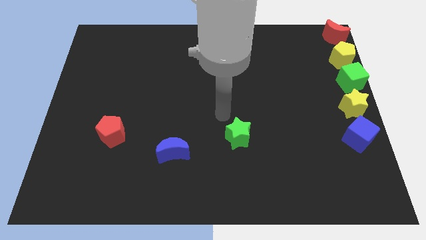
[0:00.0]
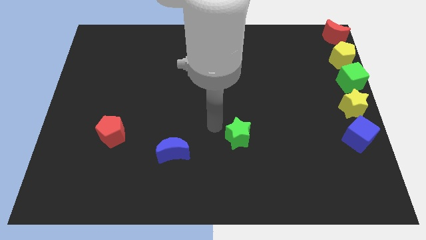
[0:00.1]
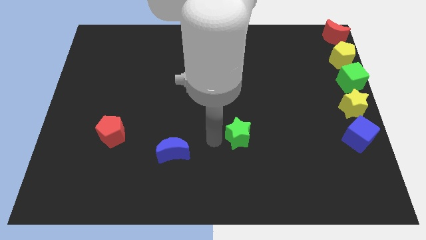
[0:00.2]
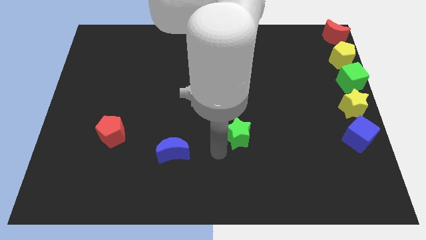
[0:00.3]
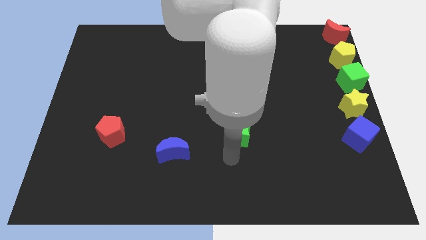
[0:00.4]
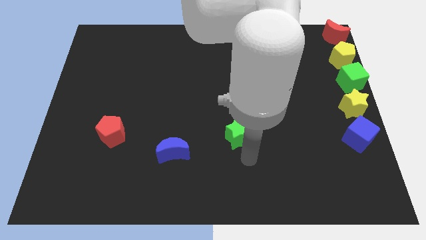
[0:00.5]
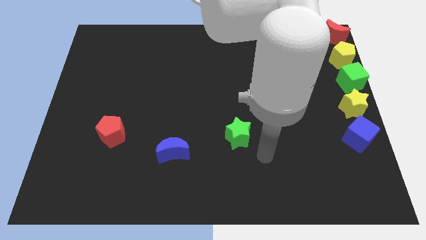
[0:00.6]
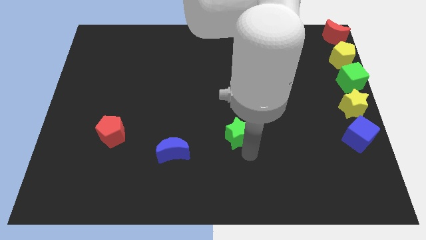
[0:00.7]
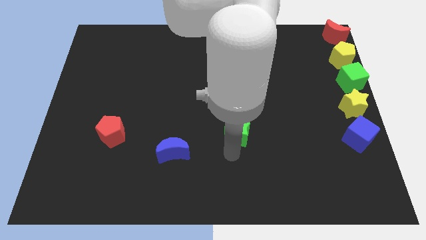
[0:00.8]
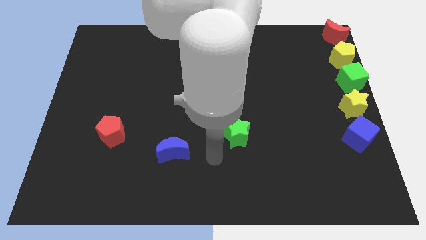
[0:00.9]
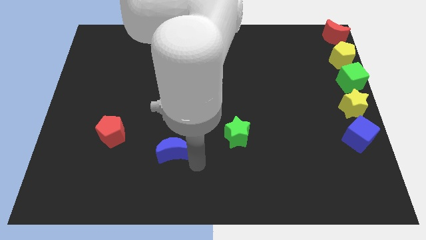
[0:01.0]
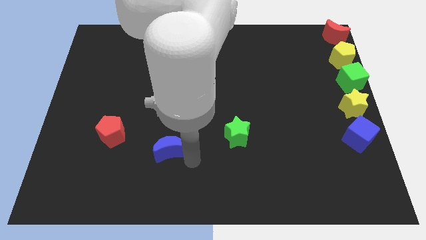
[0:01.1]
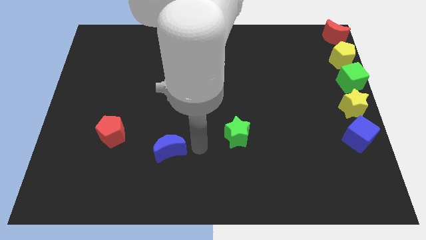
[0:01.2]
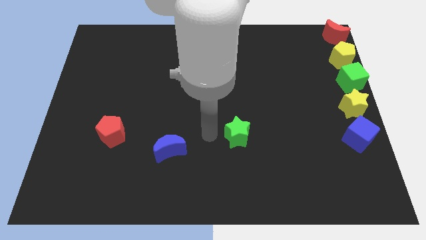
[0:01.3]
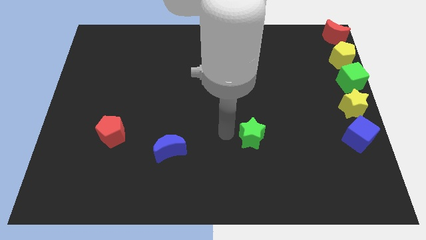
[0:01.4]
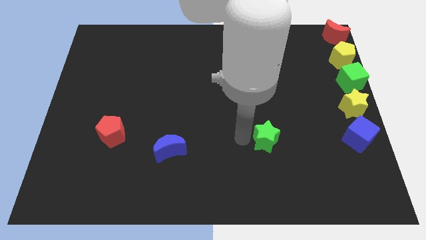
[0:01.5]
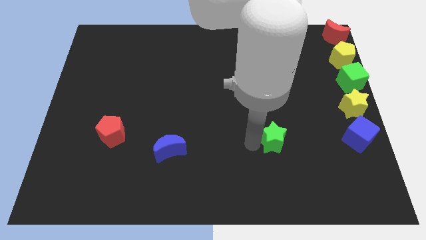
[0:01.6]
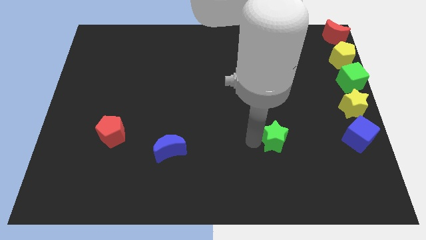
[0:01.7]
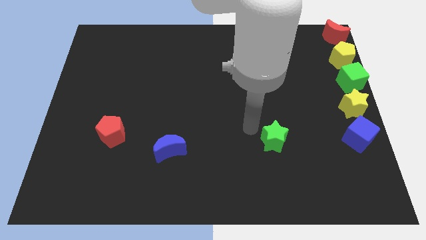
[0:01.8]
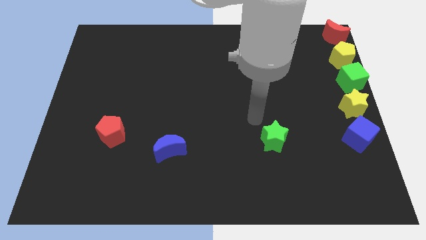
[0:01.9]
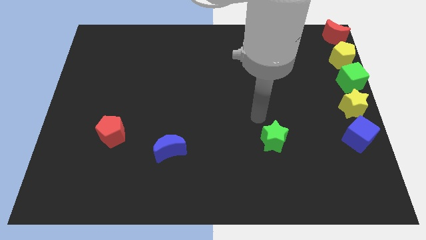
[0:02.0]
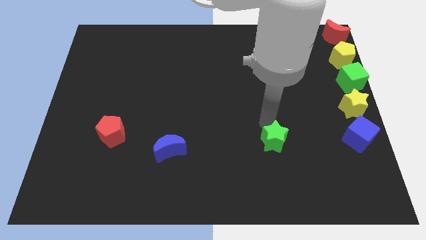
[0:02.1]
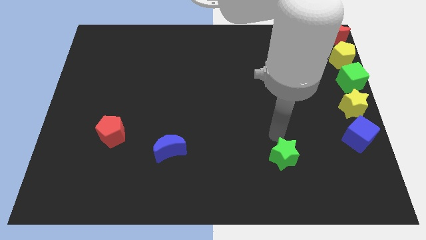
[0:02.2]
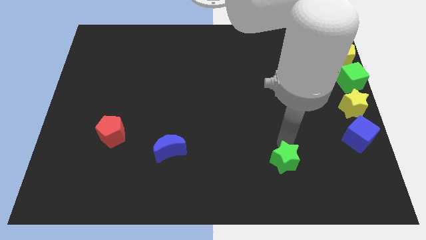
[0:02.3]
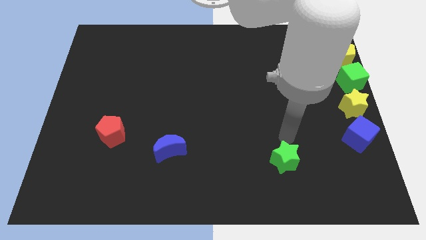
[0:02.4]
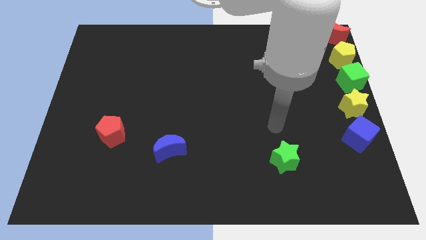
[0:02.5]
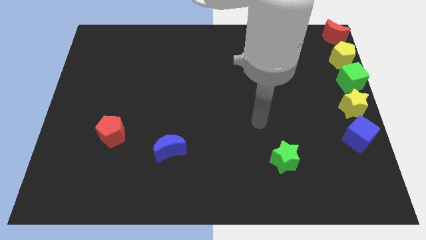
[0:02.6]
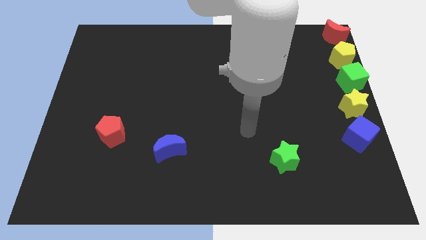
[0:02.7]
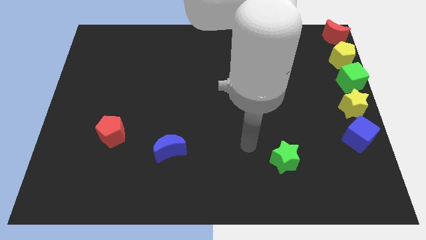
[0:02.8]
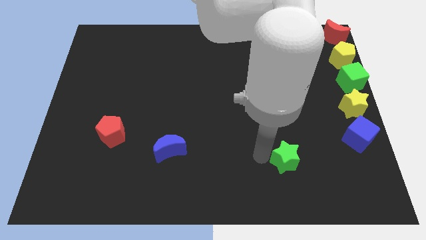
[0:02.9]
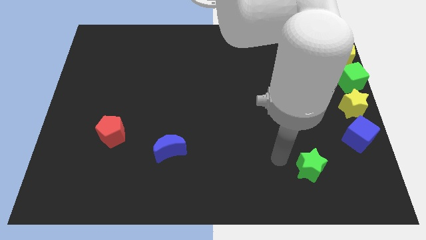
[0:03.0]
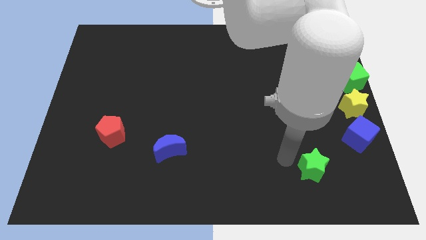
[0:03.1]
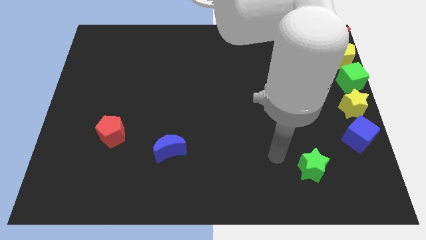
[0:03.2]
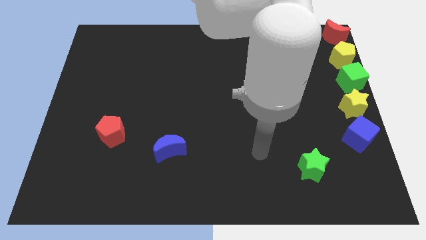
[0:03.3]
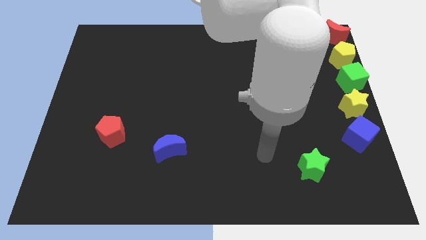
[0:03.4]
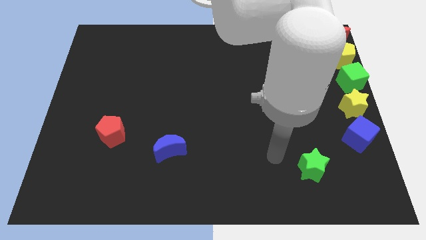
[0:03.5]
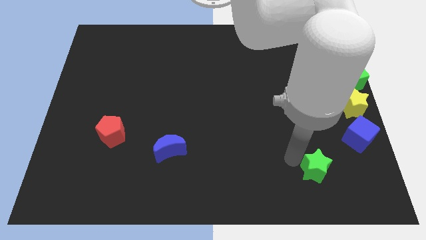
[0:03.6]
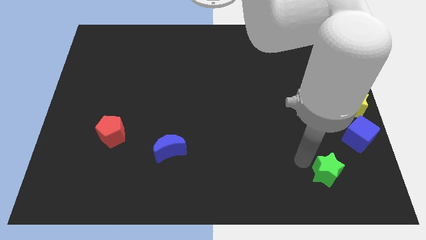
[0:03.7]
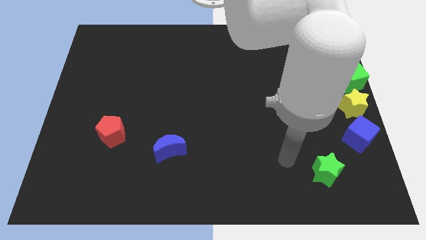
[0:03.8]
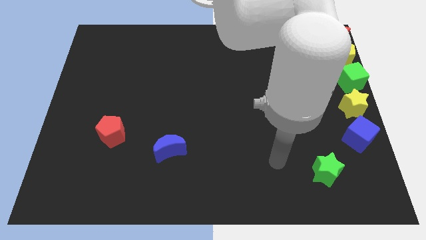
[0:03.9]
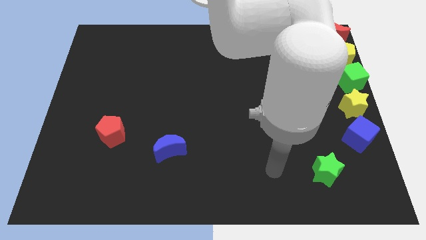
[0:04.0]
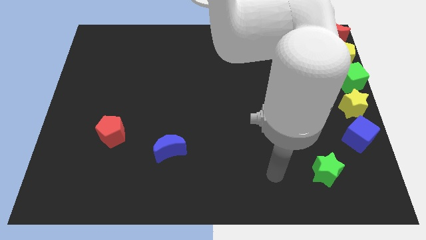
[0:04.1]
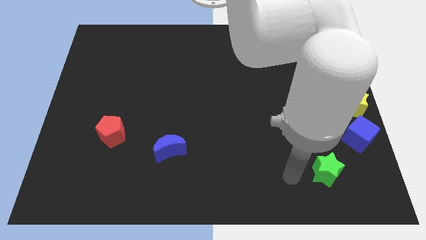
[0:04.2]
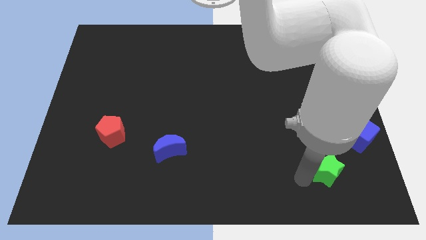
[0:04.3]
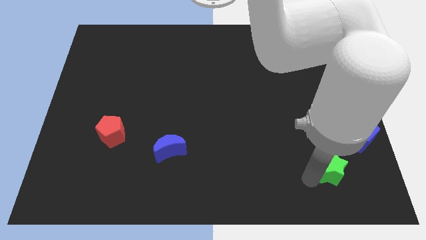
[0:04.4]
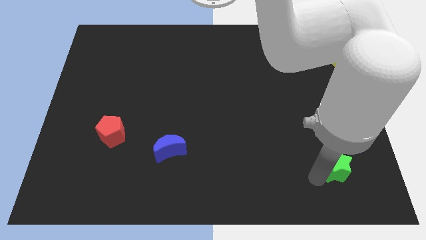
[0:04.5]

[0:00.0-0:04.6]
push the green star towards the blue cube

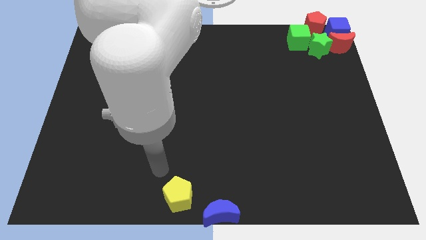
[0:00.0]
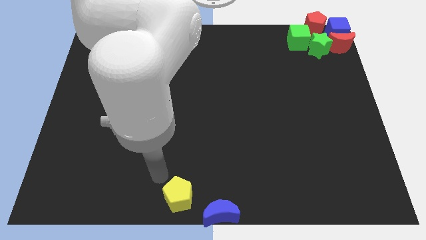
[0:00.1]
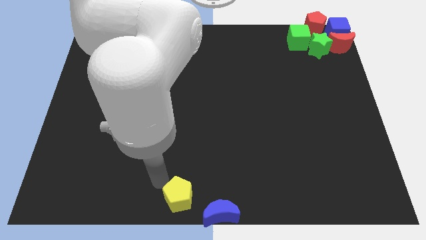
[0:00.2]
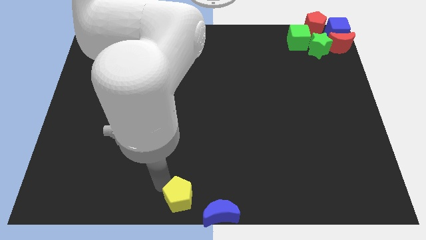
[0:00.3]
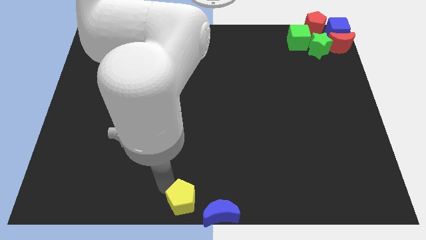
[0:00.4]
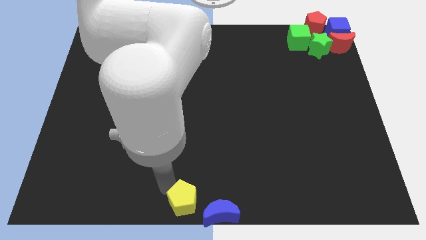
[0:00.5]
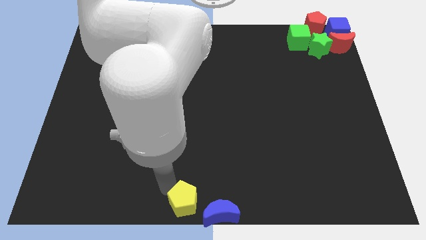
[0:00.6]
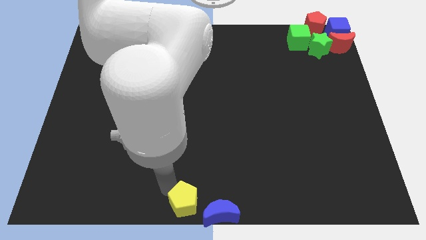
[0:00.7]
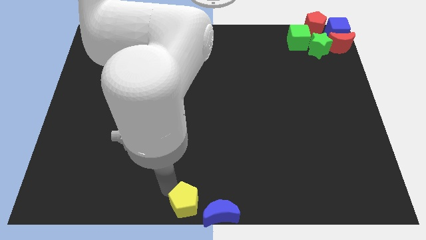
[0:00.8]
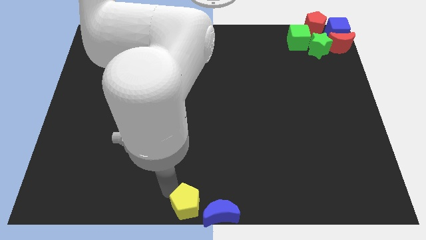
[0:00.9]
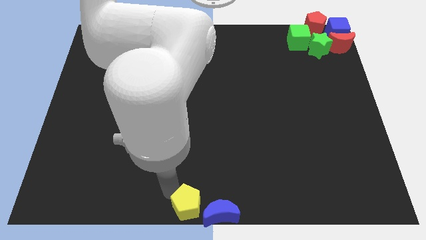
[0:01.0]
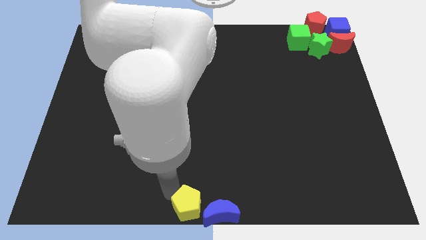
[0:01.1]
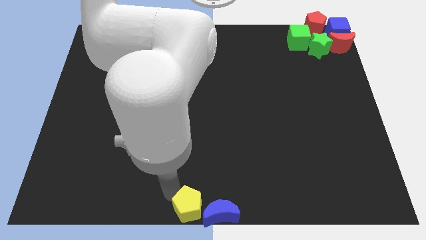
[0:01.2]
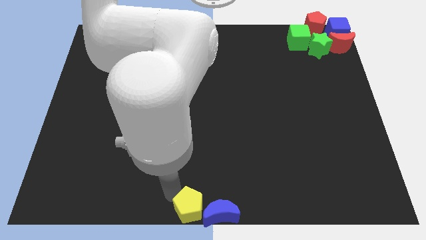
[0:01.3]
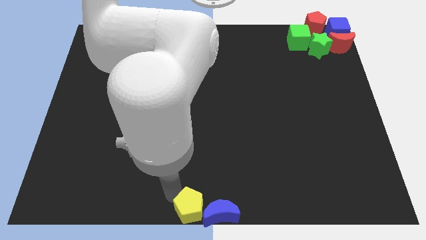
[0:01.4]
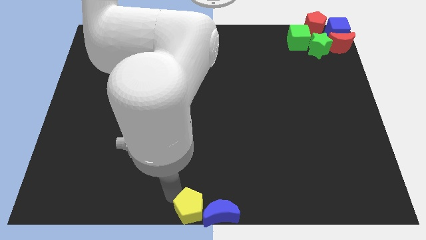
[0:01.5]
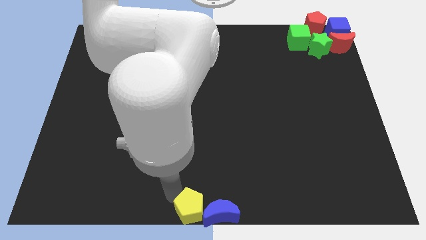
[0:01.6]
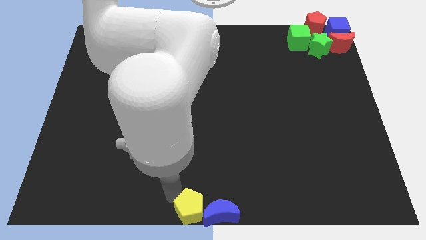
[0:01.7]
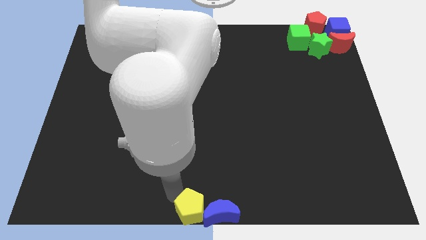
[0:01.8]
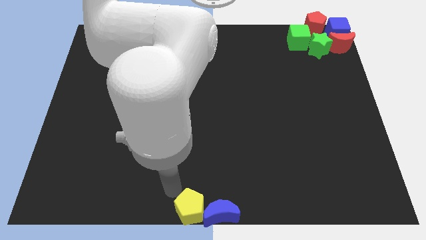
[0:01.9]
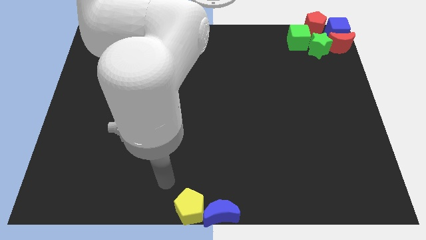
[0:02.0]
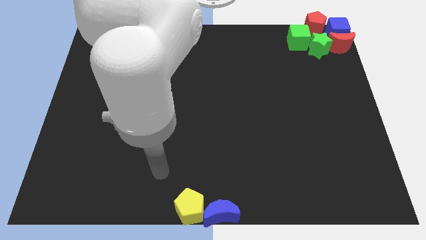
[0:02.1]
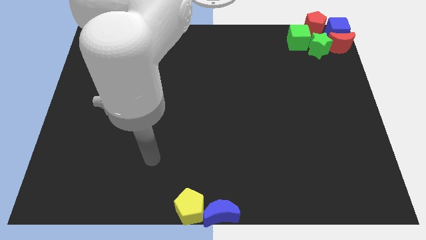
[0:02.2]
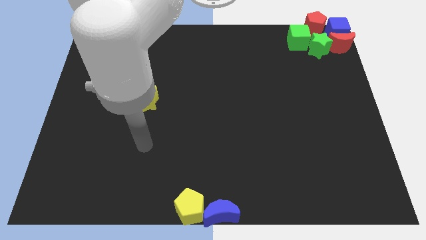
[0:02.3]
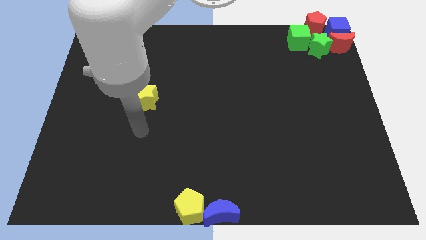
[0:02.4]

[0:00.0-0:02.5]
move the yellow pentagon left beside the blue crescent

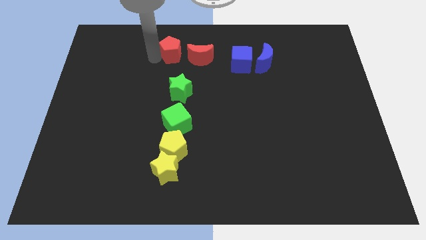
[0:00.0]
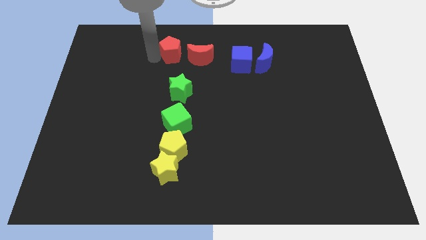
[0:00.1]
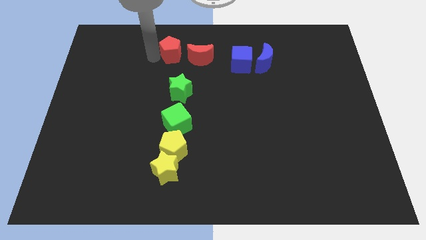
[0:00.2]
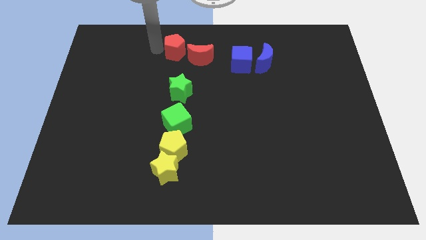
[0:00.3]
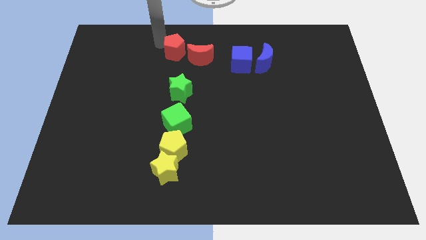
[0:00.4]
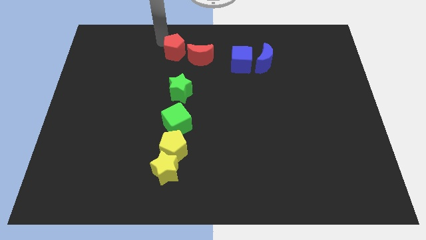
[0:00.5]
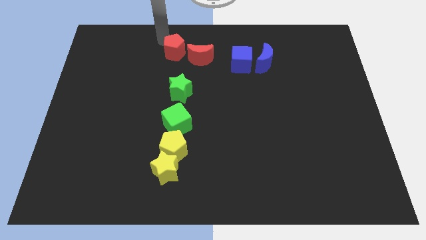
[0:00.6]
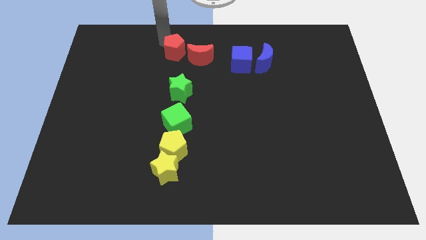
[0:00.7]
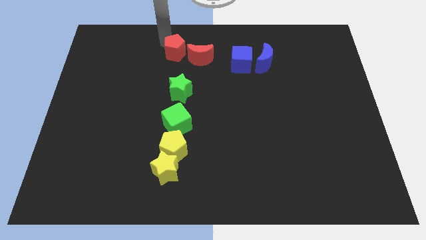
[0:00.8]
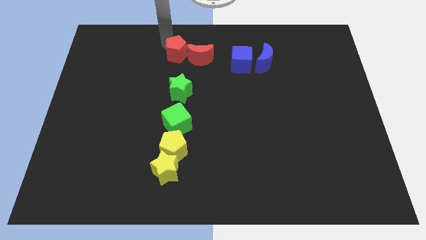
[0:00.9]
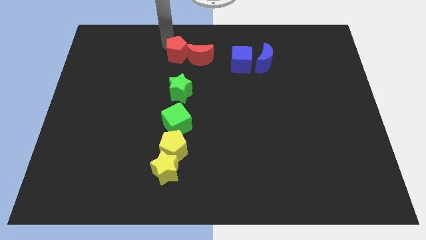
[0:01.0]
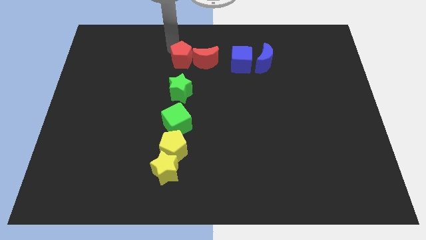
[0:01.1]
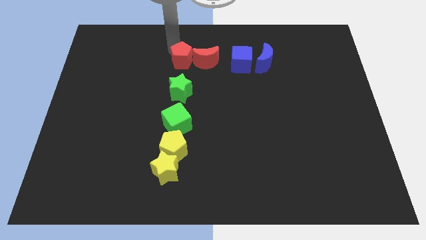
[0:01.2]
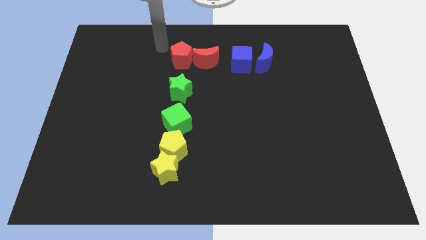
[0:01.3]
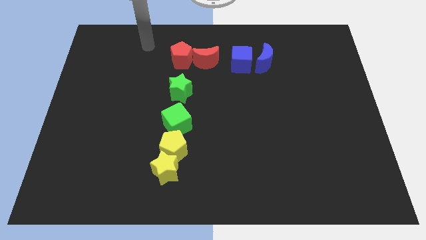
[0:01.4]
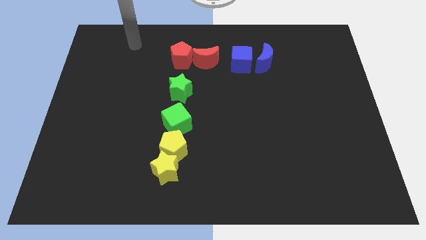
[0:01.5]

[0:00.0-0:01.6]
slide the red pentagon into the left side of the red moon
